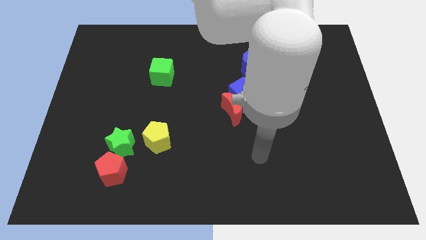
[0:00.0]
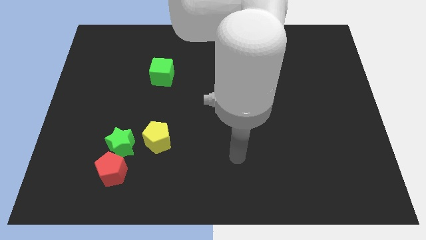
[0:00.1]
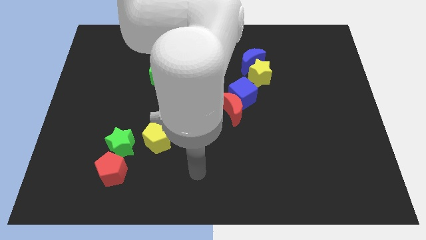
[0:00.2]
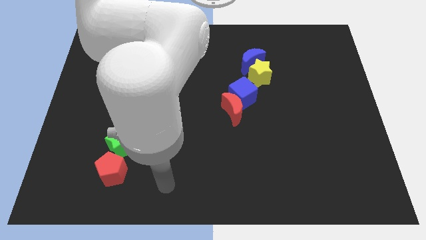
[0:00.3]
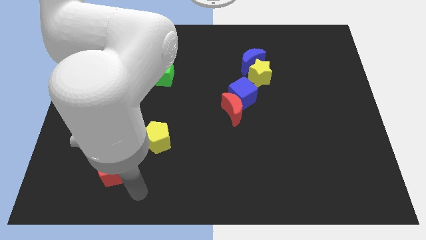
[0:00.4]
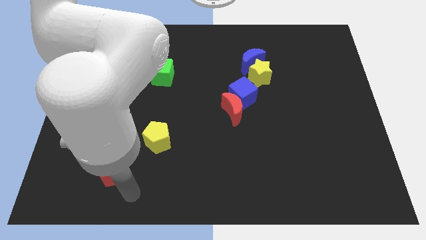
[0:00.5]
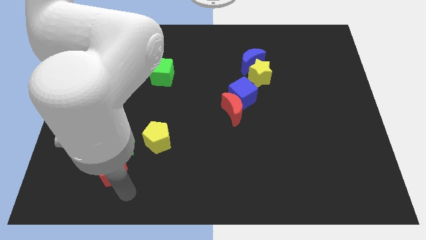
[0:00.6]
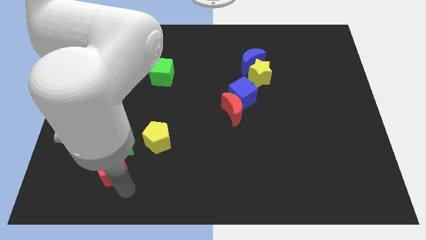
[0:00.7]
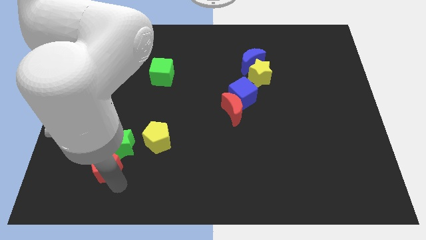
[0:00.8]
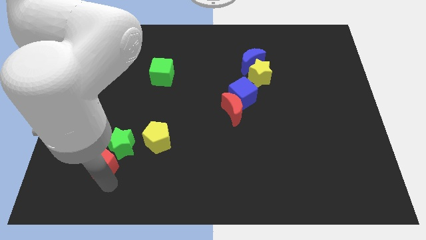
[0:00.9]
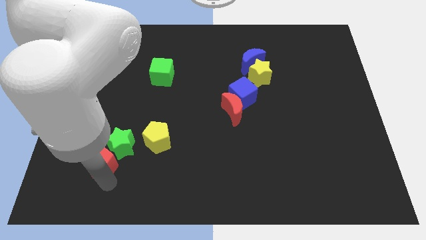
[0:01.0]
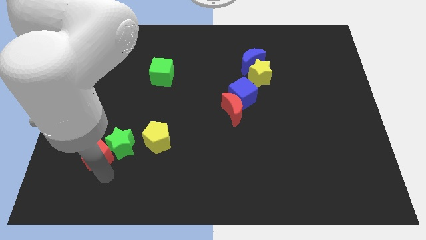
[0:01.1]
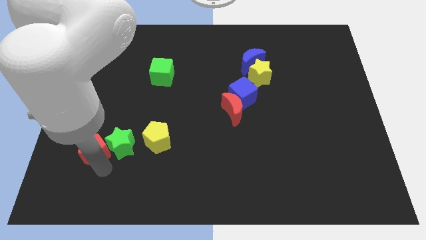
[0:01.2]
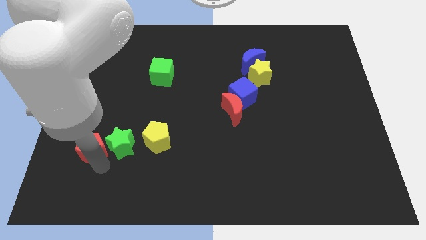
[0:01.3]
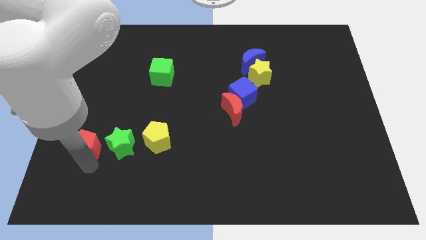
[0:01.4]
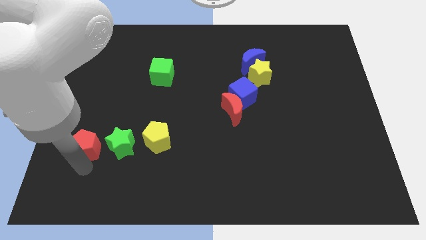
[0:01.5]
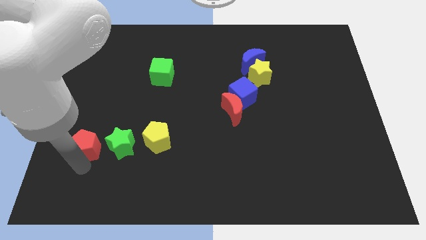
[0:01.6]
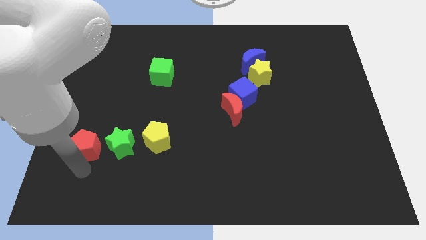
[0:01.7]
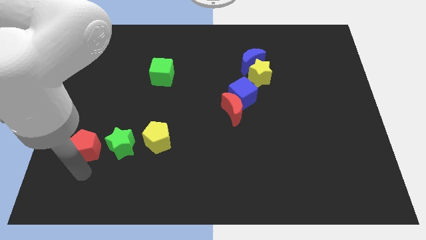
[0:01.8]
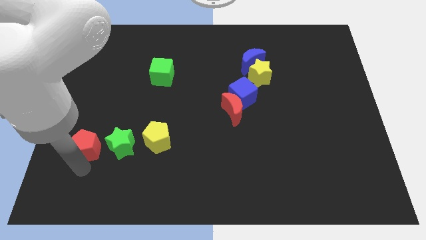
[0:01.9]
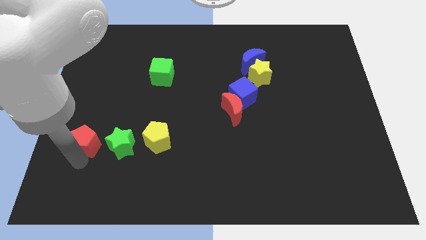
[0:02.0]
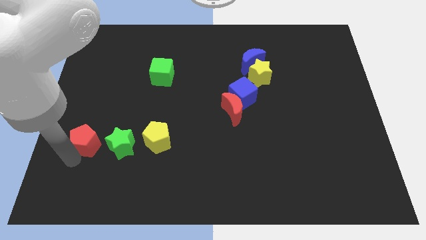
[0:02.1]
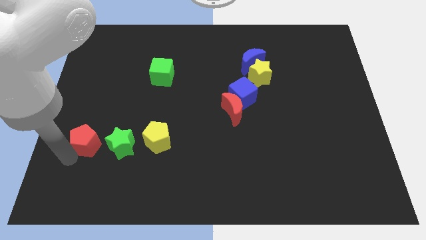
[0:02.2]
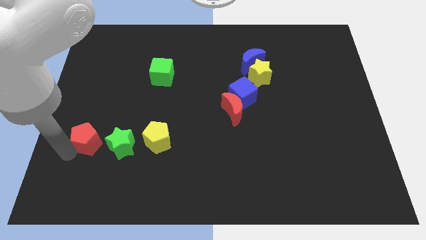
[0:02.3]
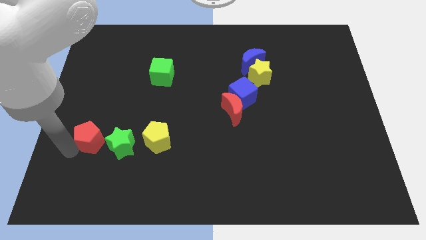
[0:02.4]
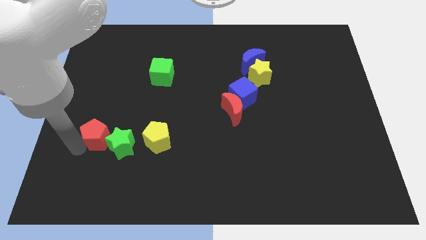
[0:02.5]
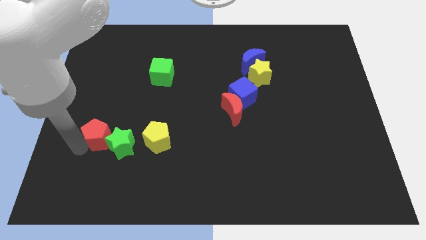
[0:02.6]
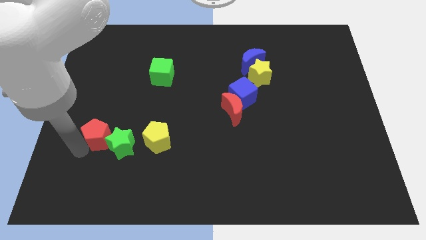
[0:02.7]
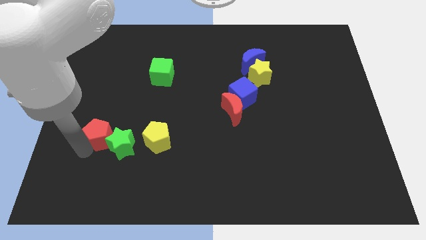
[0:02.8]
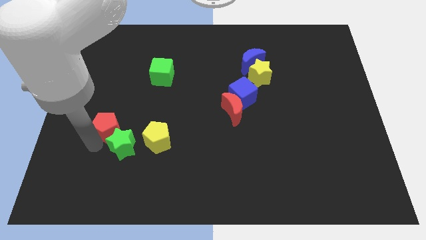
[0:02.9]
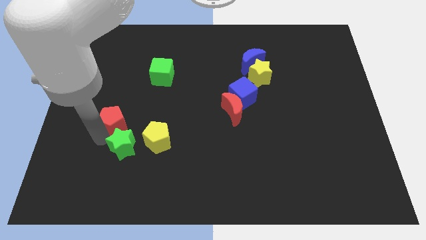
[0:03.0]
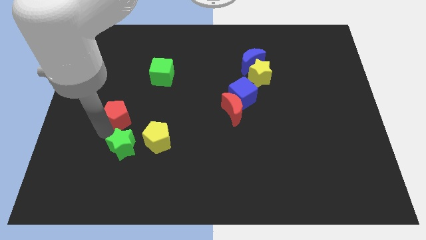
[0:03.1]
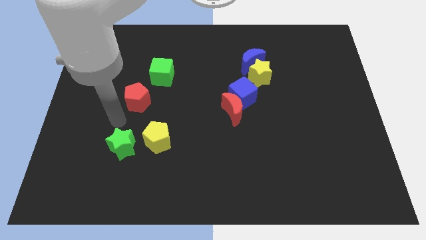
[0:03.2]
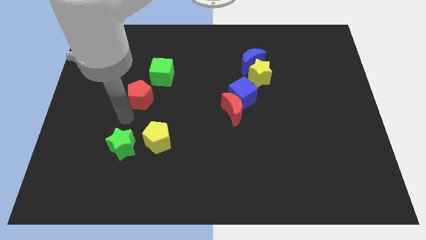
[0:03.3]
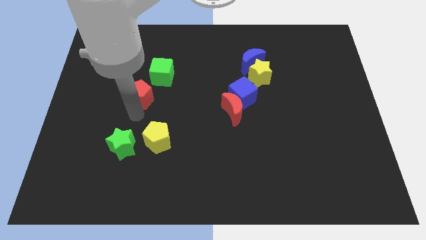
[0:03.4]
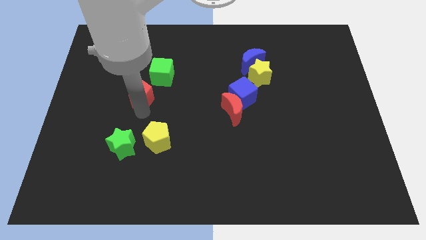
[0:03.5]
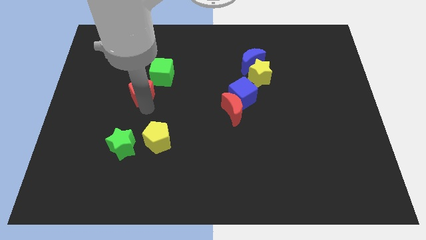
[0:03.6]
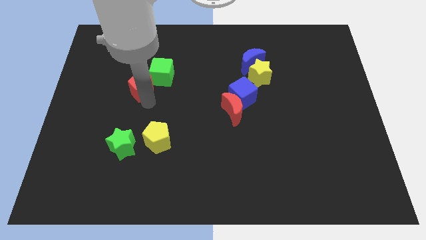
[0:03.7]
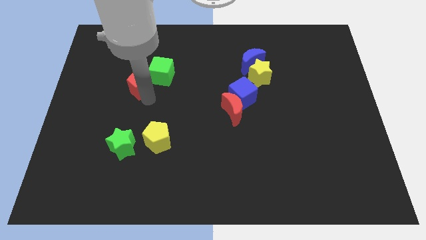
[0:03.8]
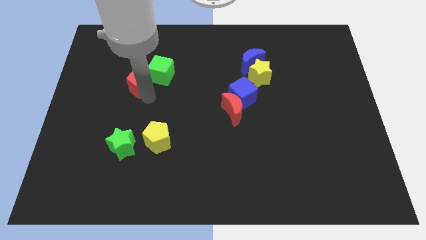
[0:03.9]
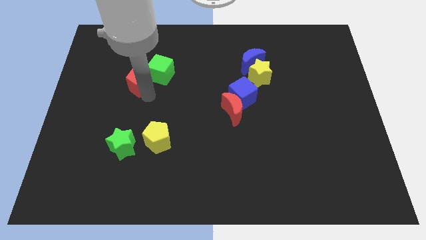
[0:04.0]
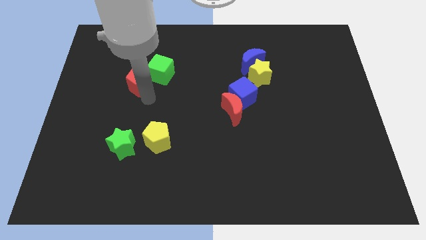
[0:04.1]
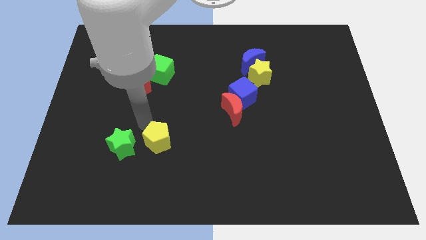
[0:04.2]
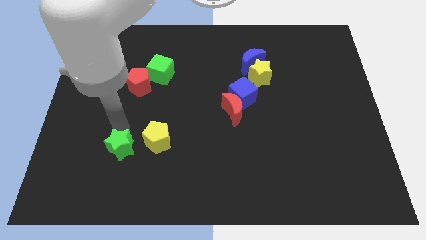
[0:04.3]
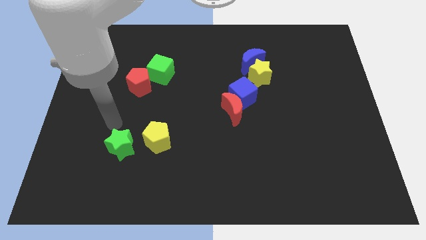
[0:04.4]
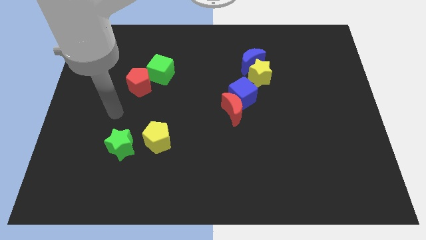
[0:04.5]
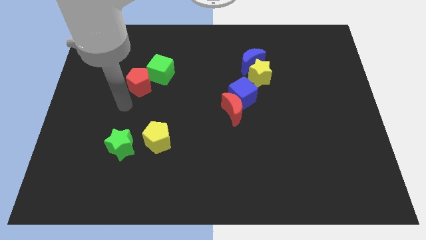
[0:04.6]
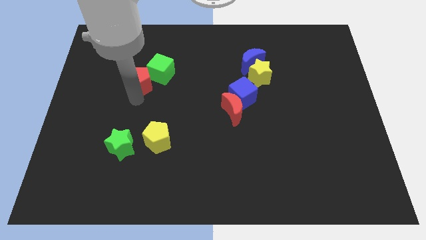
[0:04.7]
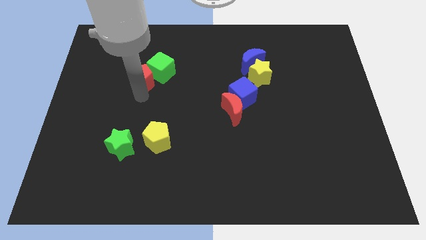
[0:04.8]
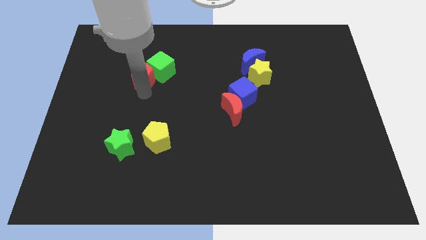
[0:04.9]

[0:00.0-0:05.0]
move the red pentagon close to the green cube

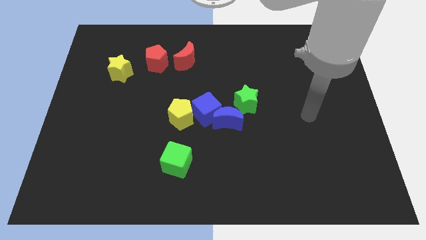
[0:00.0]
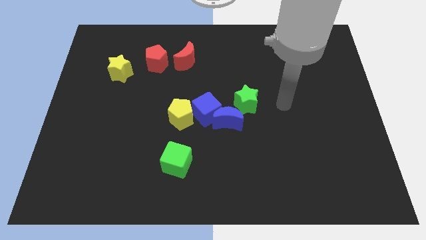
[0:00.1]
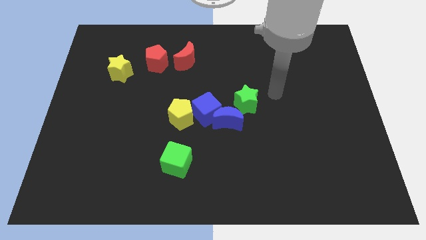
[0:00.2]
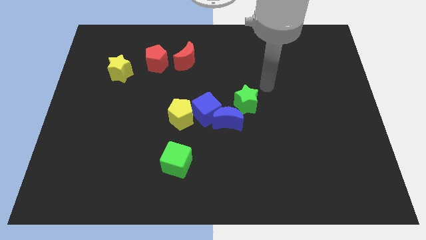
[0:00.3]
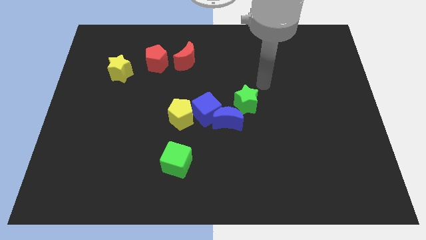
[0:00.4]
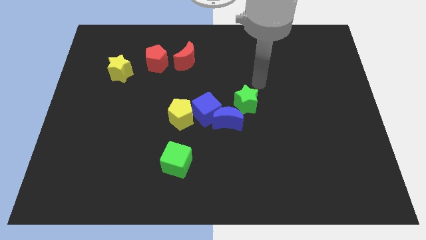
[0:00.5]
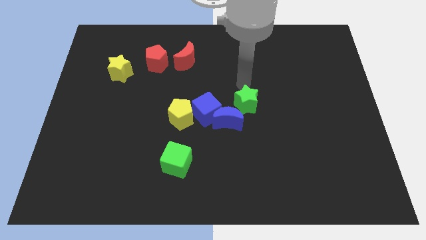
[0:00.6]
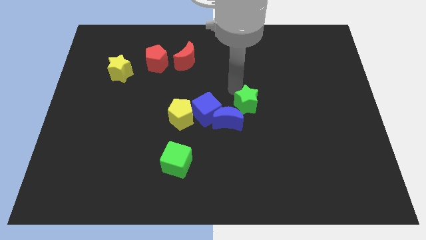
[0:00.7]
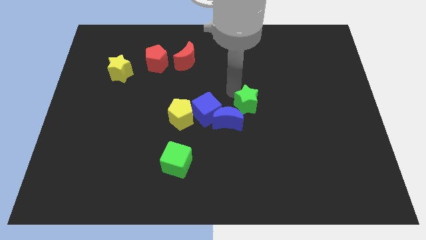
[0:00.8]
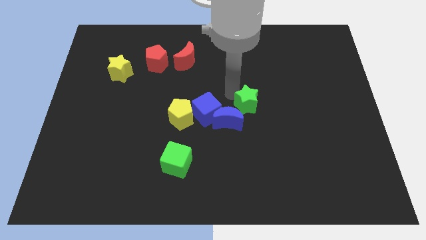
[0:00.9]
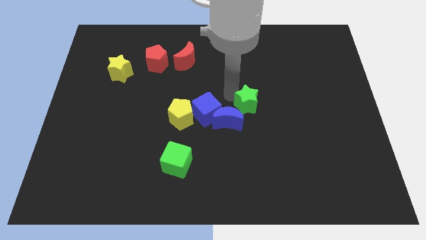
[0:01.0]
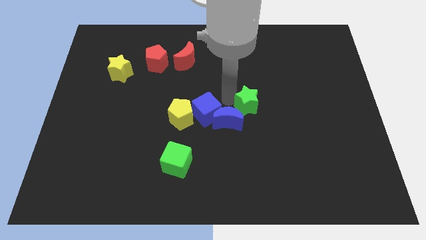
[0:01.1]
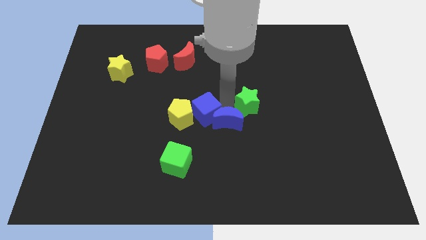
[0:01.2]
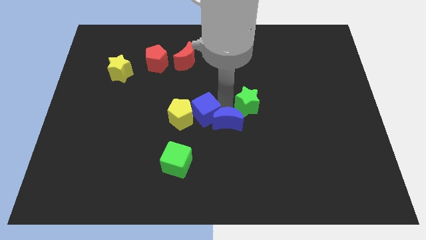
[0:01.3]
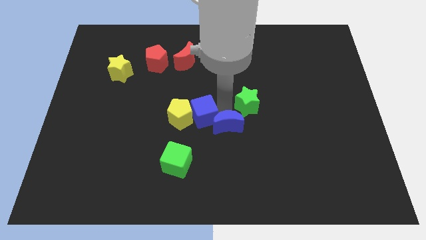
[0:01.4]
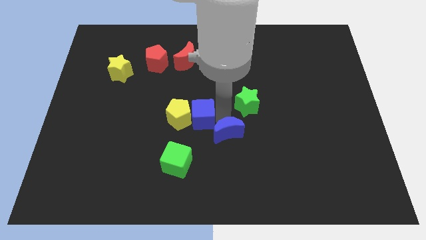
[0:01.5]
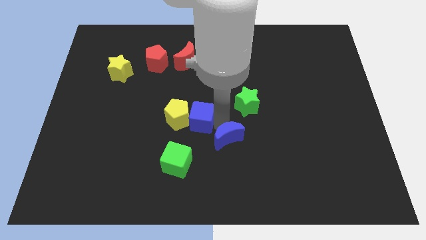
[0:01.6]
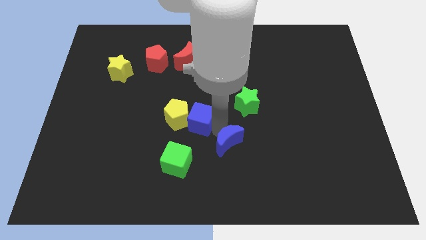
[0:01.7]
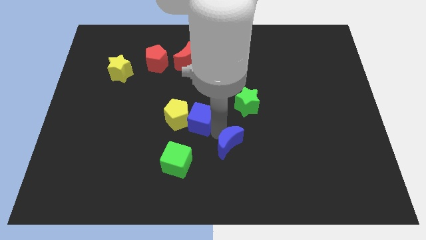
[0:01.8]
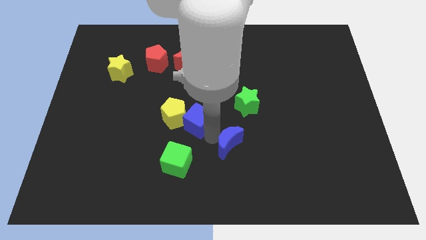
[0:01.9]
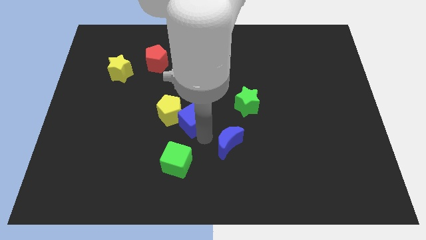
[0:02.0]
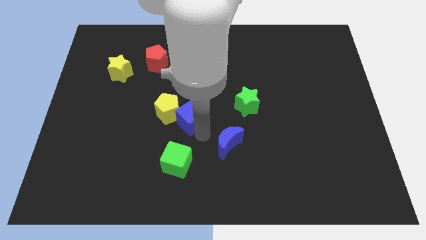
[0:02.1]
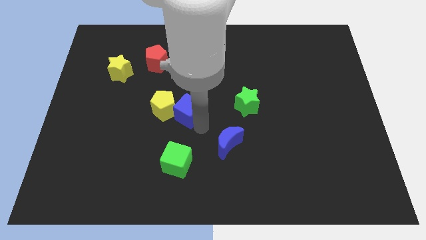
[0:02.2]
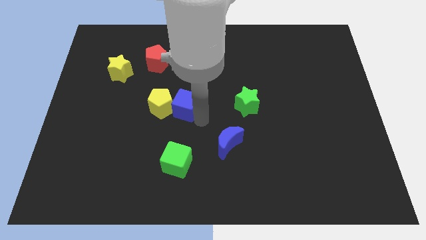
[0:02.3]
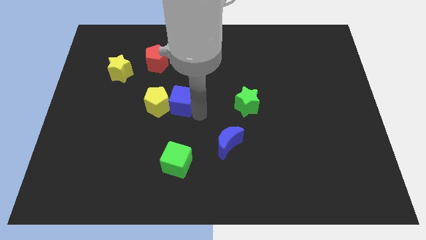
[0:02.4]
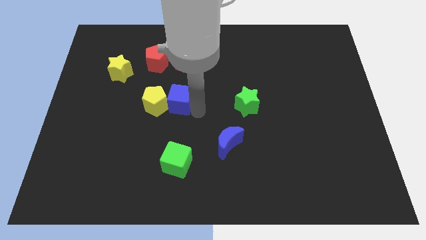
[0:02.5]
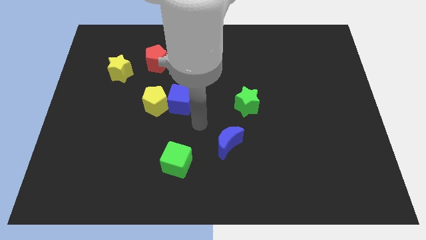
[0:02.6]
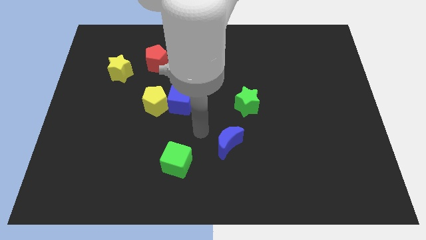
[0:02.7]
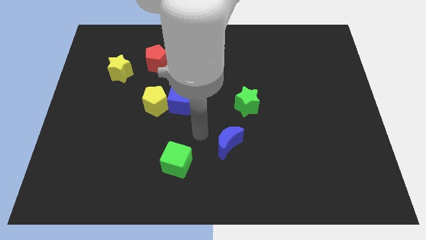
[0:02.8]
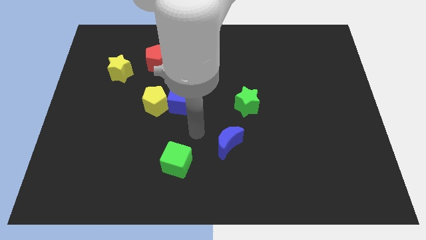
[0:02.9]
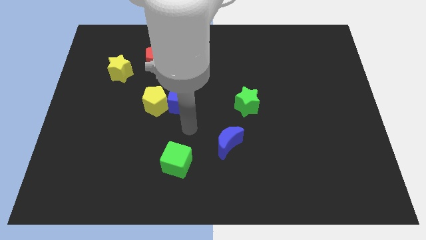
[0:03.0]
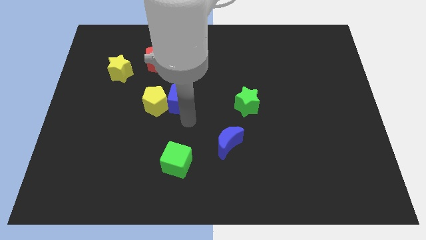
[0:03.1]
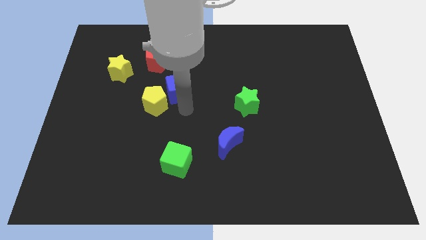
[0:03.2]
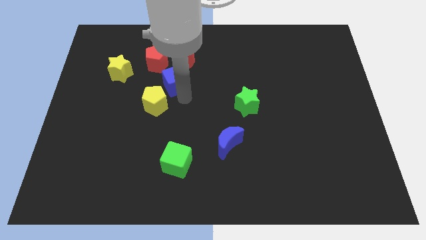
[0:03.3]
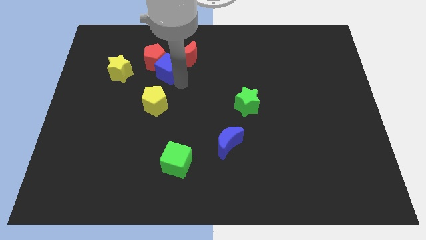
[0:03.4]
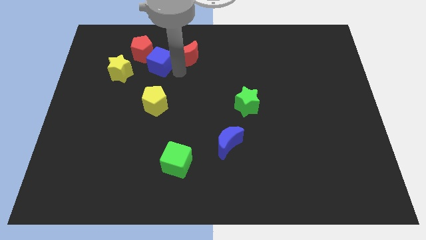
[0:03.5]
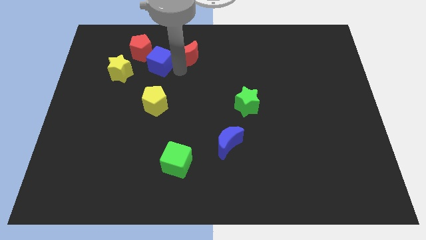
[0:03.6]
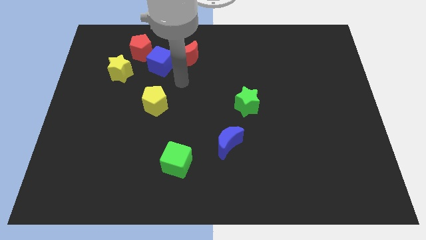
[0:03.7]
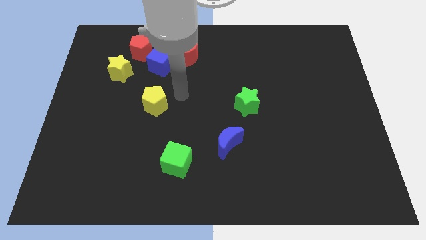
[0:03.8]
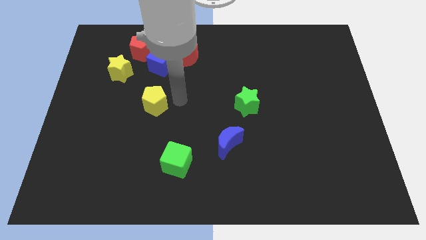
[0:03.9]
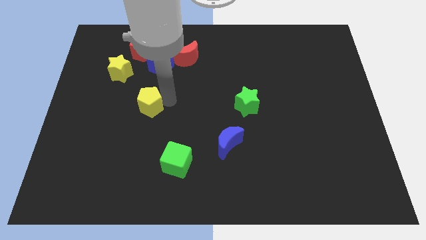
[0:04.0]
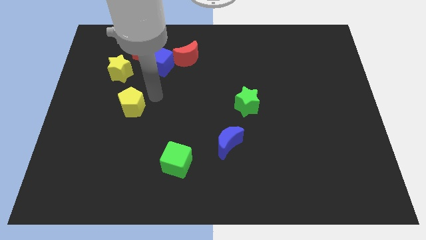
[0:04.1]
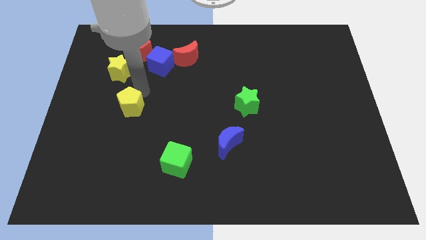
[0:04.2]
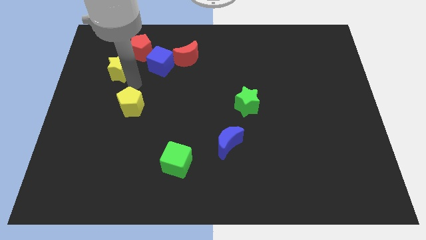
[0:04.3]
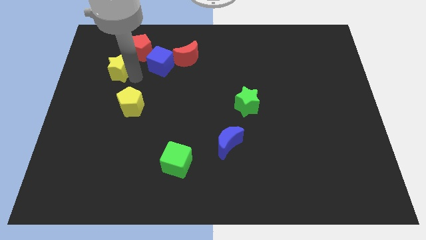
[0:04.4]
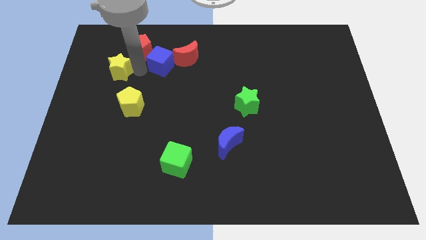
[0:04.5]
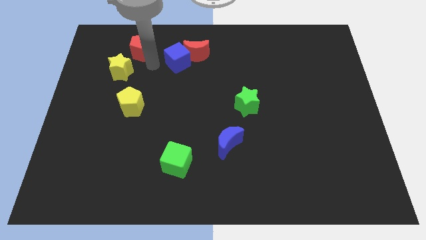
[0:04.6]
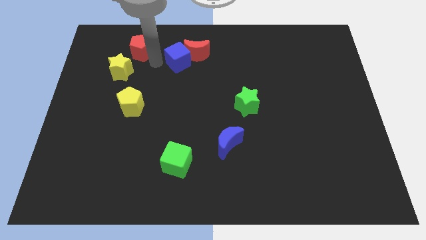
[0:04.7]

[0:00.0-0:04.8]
move the blue cube towards the red moon
